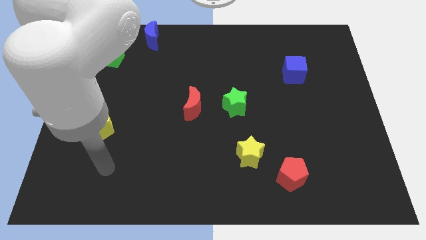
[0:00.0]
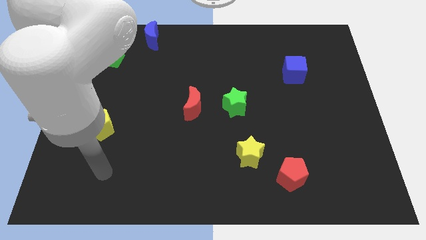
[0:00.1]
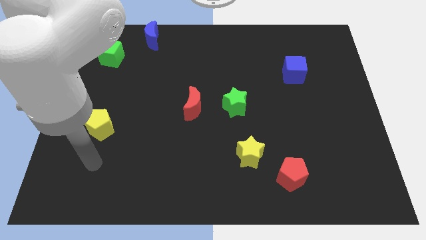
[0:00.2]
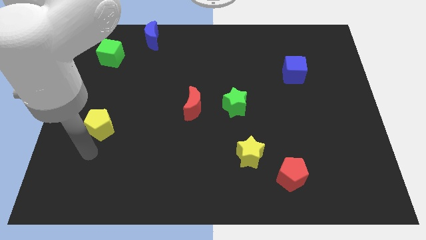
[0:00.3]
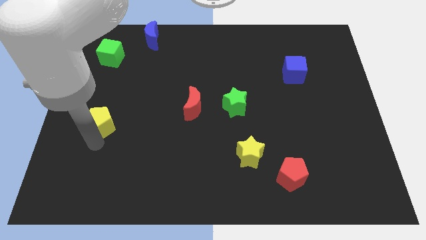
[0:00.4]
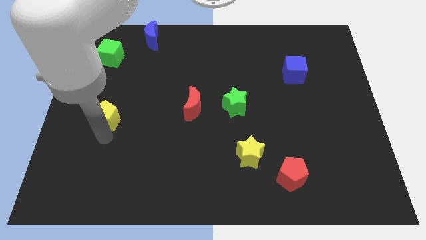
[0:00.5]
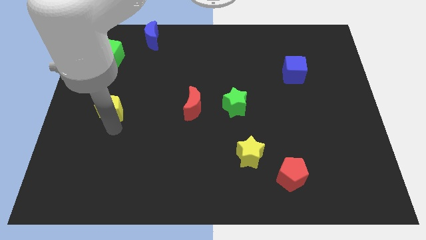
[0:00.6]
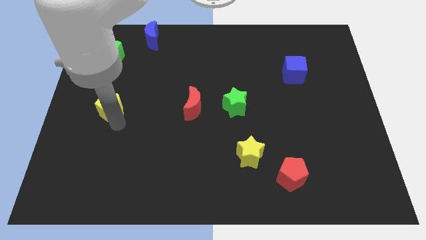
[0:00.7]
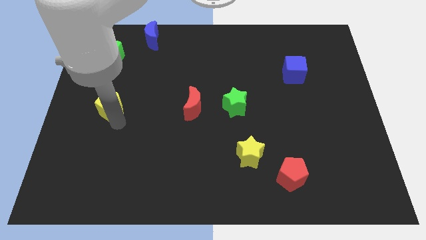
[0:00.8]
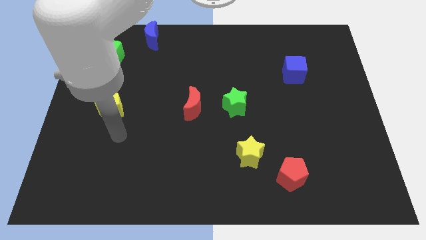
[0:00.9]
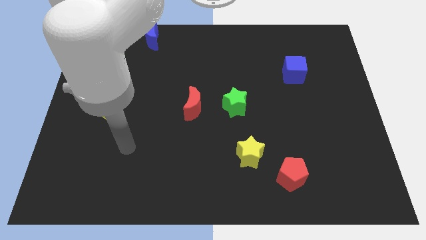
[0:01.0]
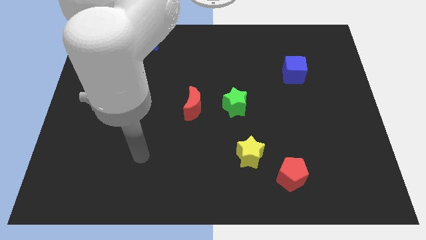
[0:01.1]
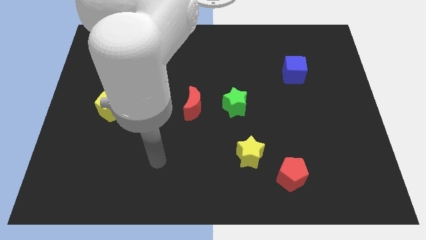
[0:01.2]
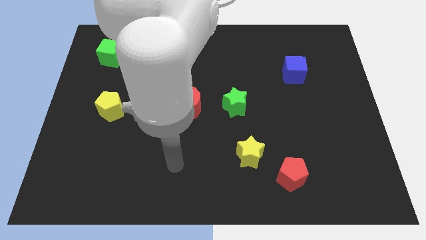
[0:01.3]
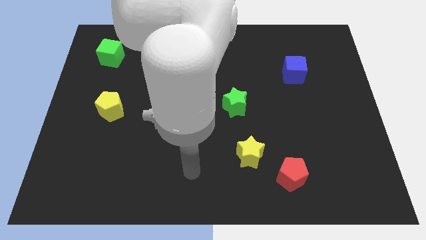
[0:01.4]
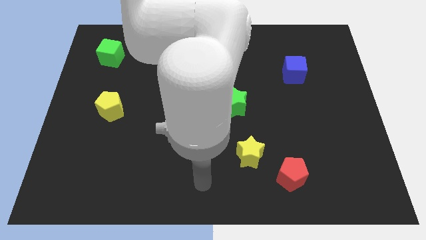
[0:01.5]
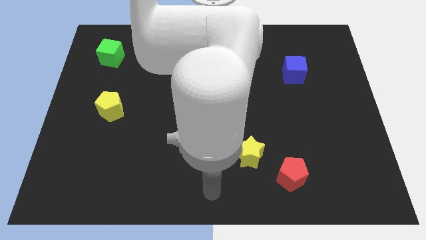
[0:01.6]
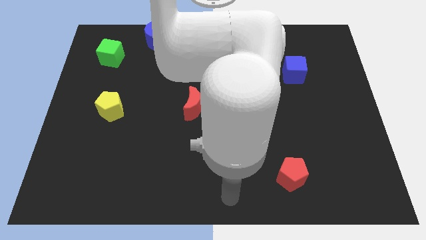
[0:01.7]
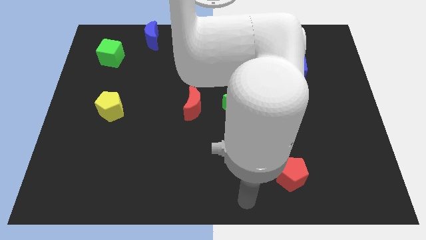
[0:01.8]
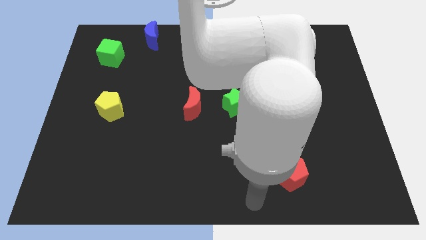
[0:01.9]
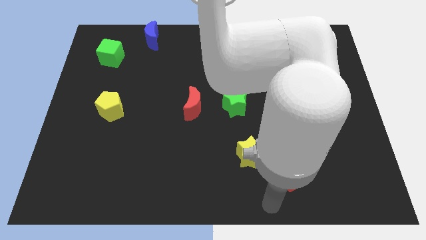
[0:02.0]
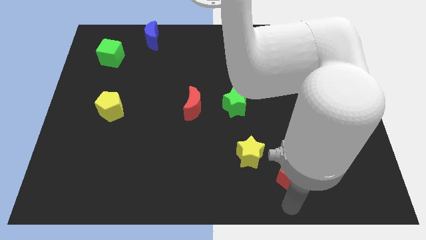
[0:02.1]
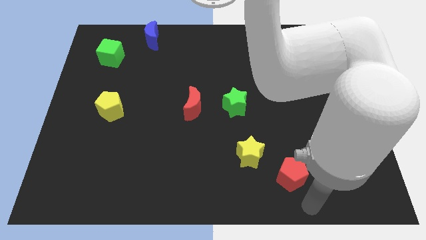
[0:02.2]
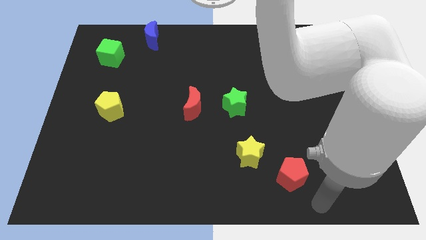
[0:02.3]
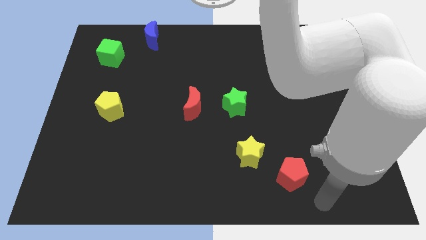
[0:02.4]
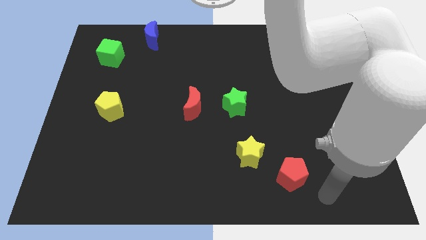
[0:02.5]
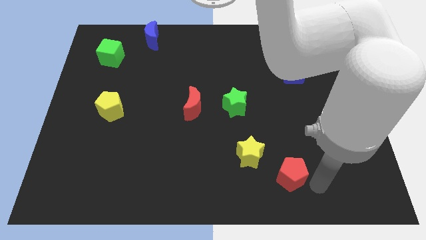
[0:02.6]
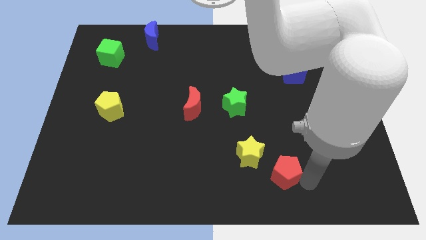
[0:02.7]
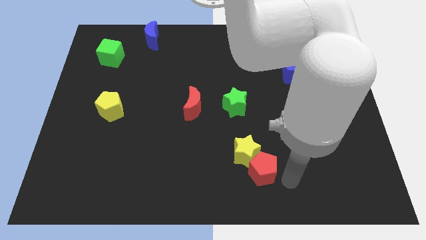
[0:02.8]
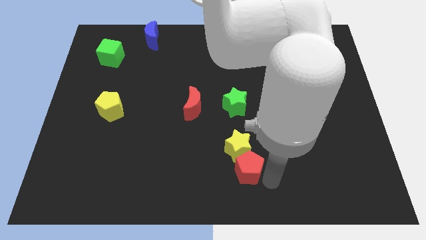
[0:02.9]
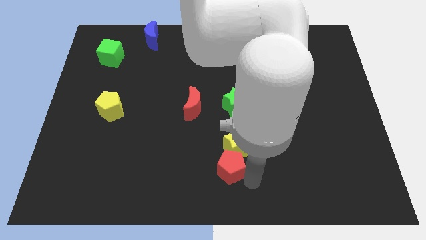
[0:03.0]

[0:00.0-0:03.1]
push the red pentagon into the yellow star

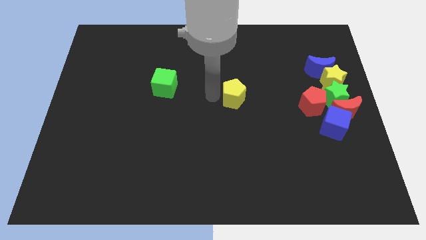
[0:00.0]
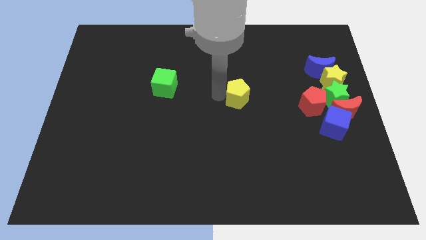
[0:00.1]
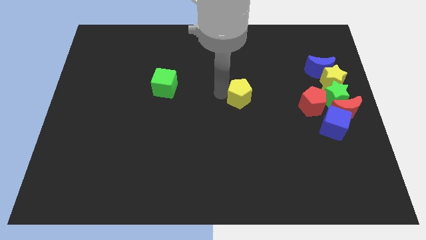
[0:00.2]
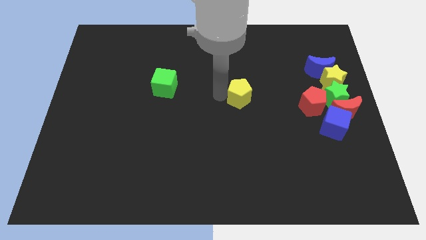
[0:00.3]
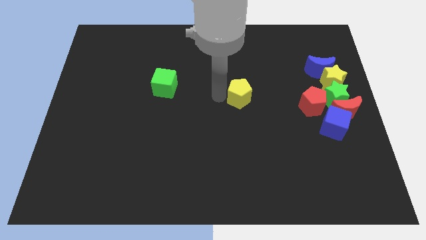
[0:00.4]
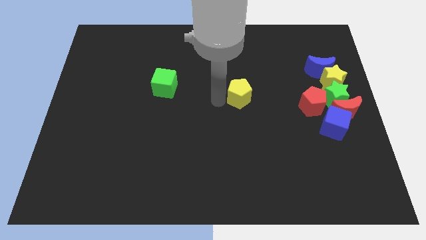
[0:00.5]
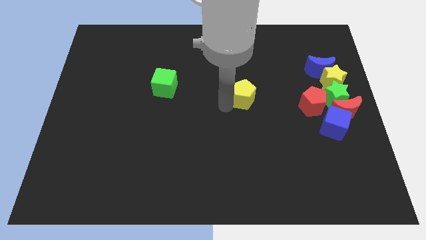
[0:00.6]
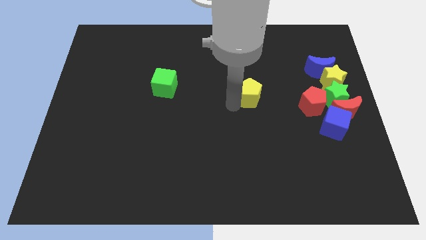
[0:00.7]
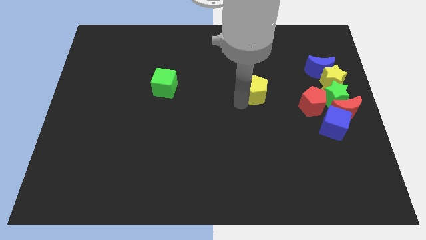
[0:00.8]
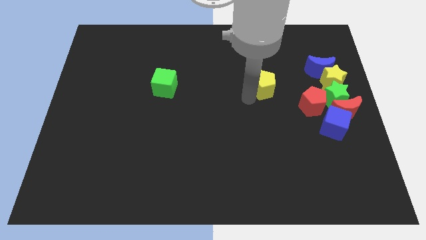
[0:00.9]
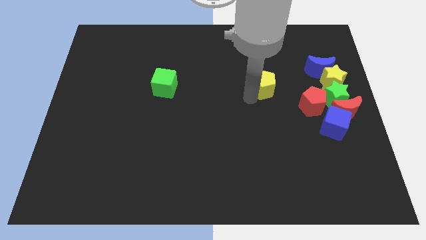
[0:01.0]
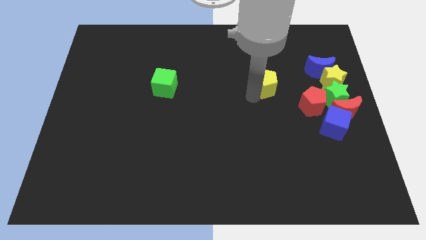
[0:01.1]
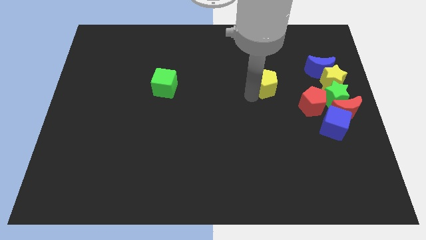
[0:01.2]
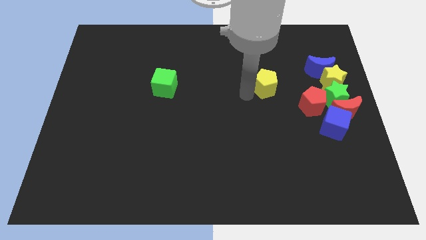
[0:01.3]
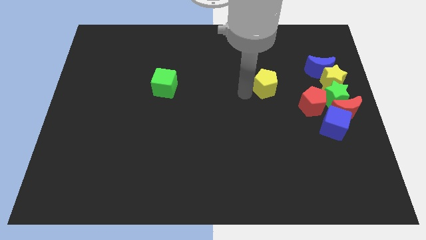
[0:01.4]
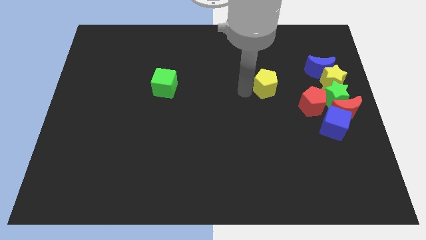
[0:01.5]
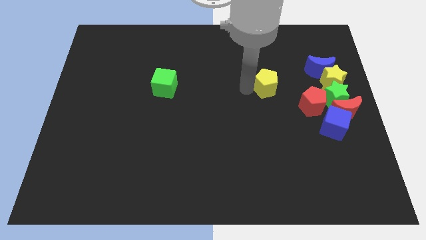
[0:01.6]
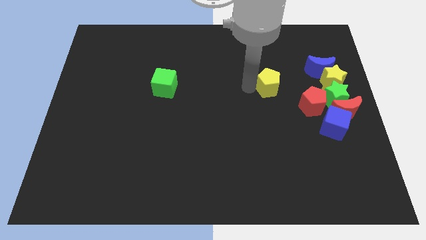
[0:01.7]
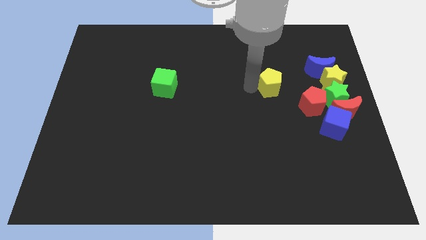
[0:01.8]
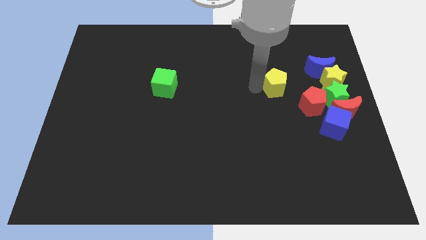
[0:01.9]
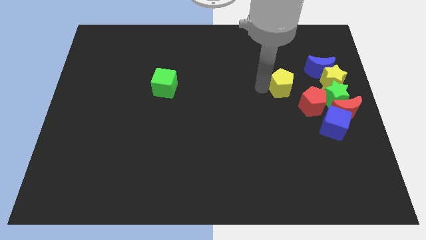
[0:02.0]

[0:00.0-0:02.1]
drag the yellow pentagon towards the left side of the group of blocks

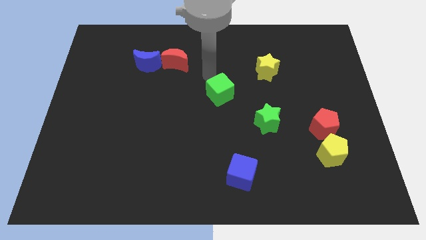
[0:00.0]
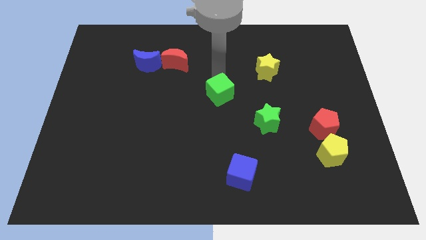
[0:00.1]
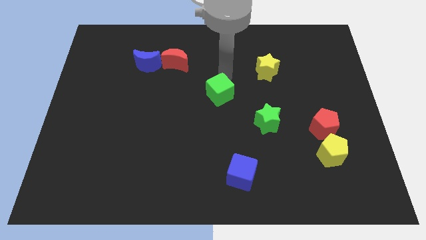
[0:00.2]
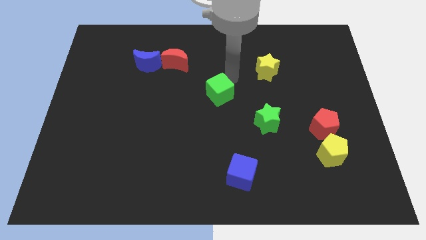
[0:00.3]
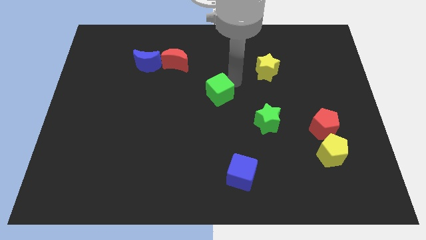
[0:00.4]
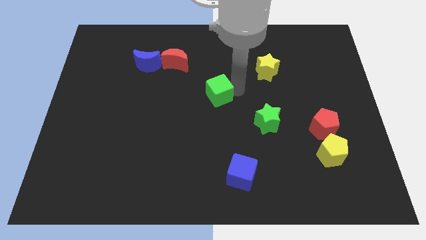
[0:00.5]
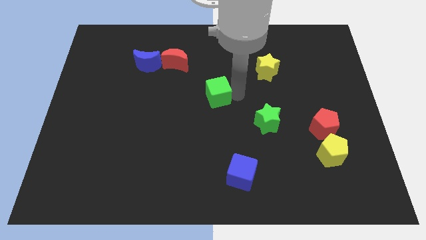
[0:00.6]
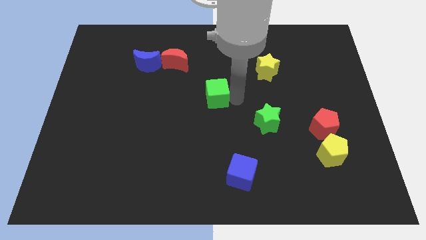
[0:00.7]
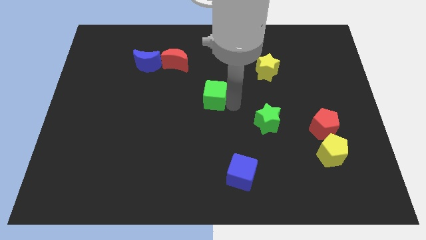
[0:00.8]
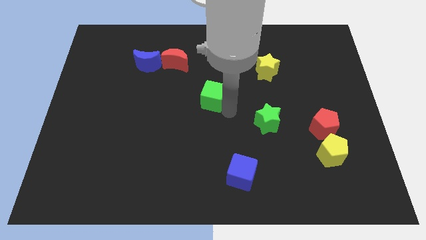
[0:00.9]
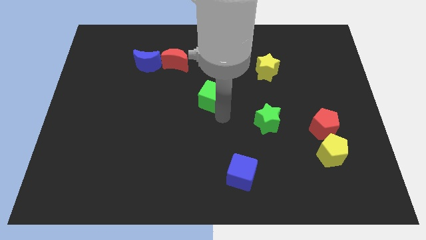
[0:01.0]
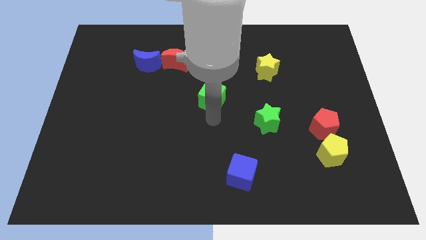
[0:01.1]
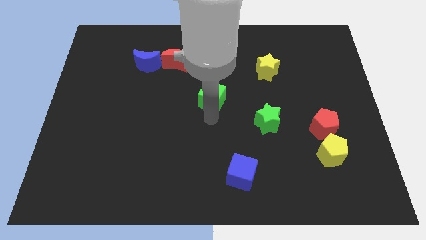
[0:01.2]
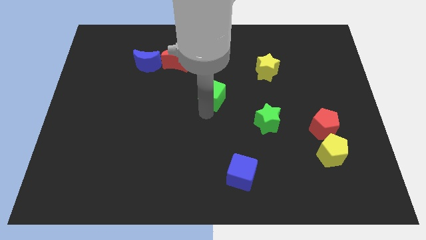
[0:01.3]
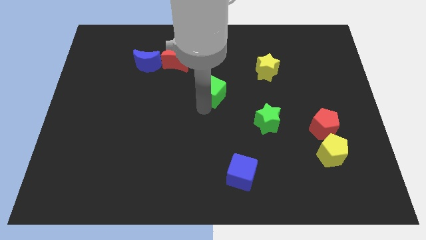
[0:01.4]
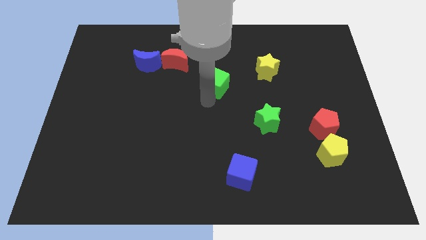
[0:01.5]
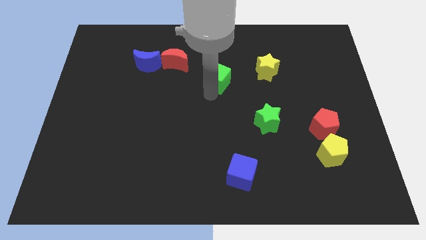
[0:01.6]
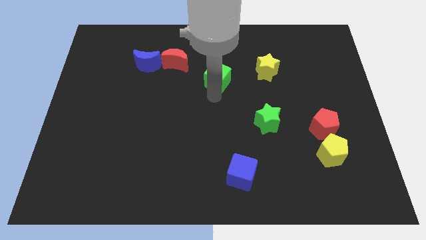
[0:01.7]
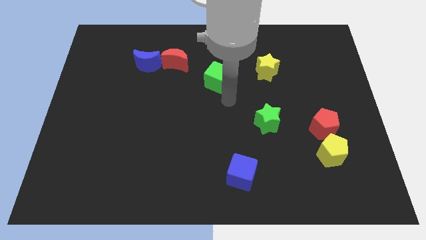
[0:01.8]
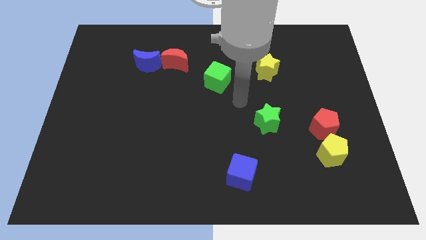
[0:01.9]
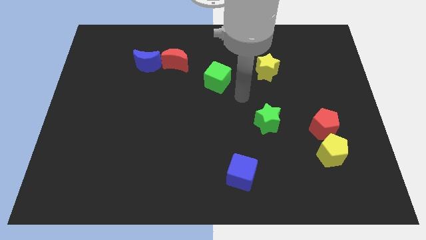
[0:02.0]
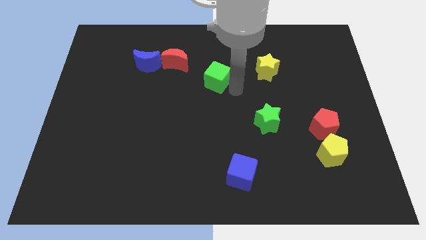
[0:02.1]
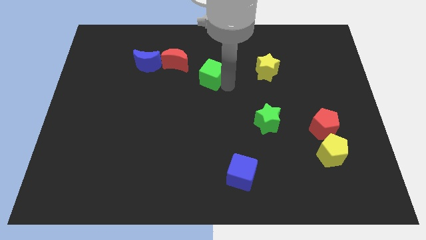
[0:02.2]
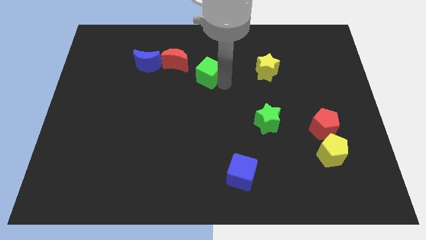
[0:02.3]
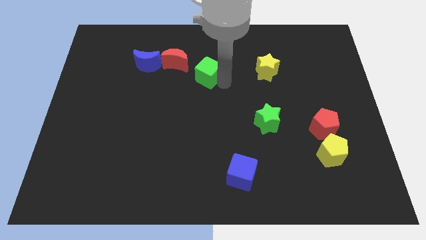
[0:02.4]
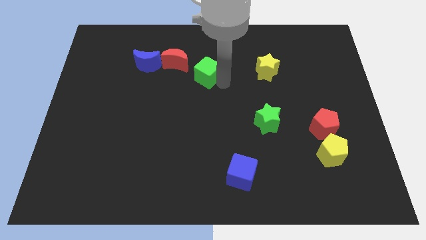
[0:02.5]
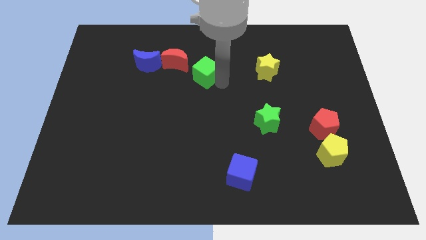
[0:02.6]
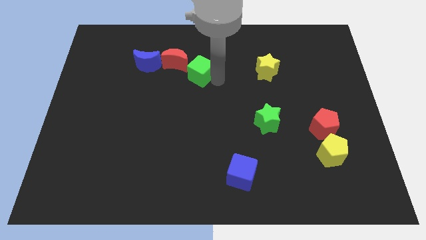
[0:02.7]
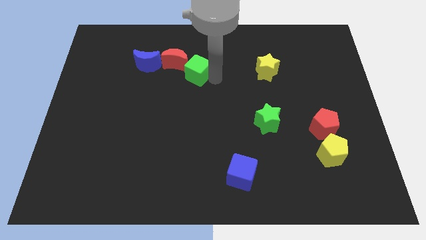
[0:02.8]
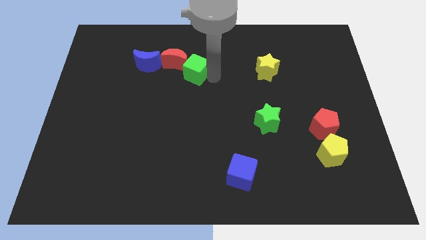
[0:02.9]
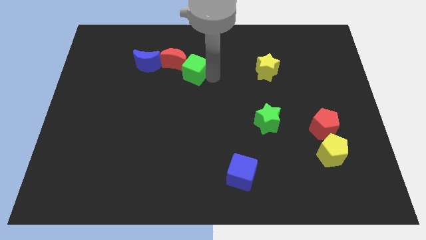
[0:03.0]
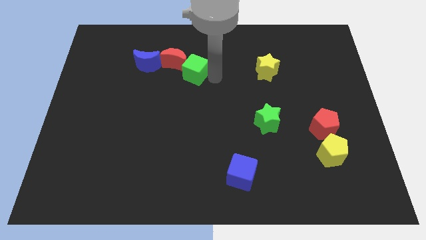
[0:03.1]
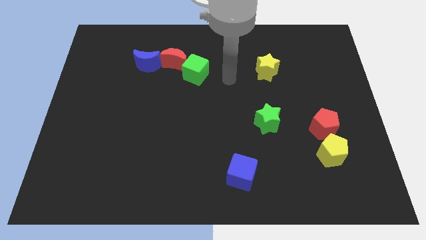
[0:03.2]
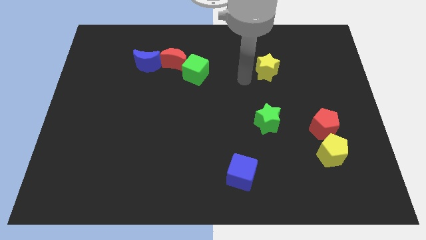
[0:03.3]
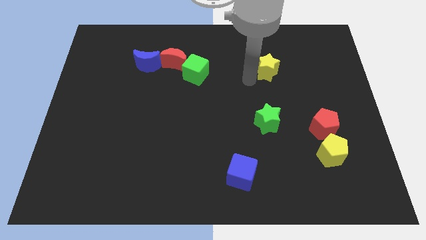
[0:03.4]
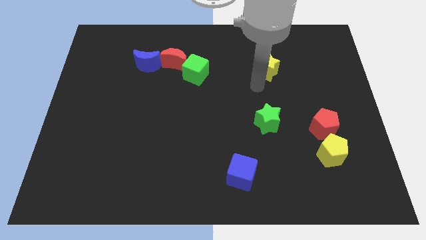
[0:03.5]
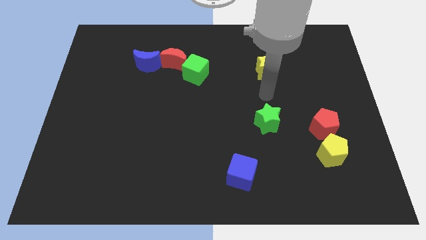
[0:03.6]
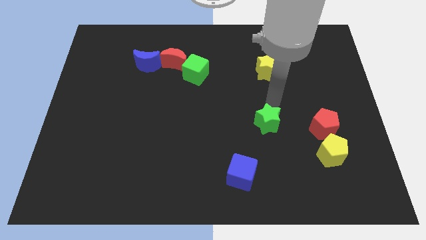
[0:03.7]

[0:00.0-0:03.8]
move the green cube to the right of the red crescent
